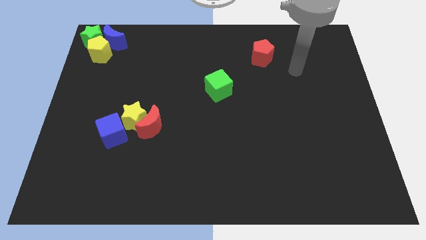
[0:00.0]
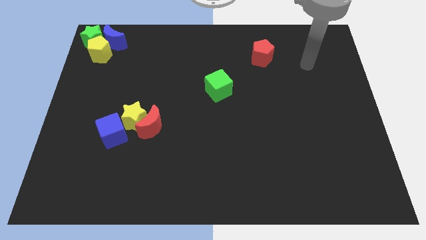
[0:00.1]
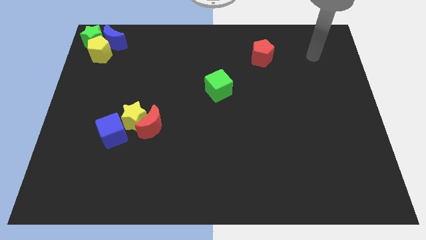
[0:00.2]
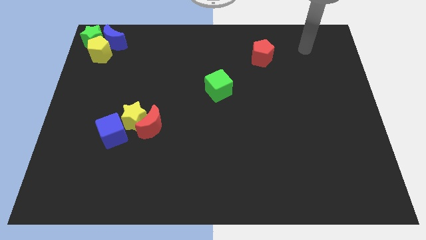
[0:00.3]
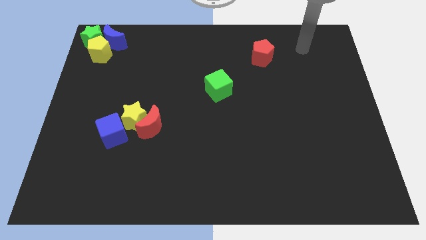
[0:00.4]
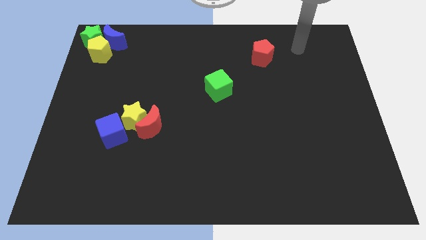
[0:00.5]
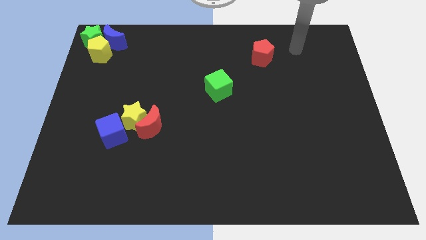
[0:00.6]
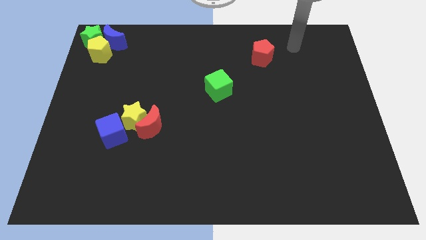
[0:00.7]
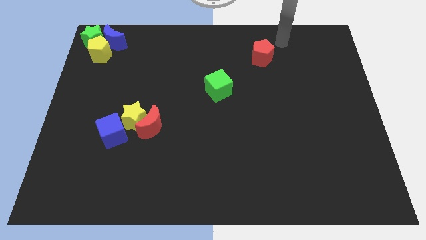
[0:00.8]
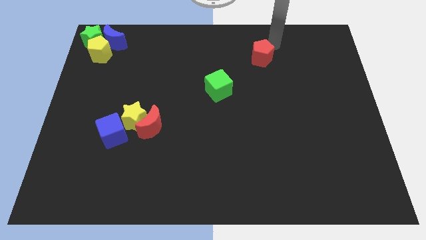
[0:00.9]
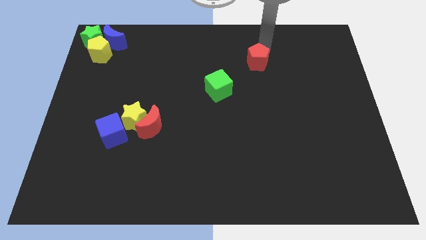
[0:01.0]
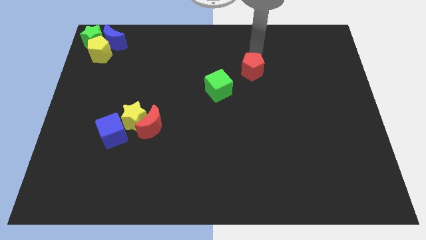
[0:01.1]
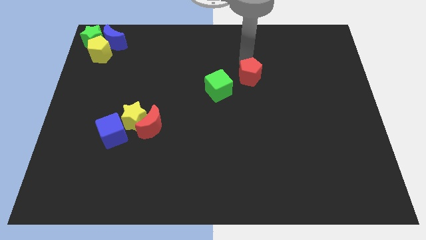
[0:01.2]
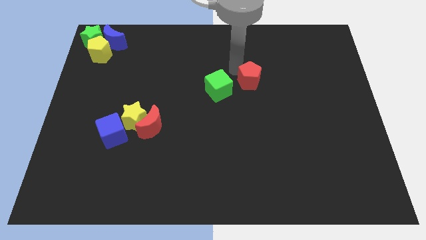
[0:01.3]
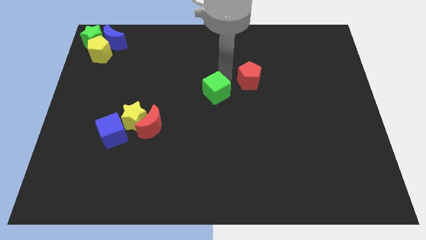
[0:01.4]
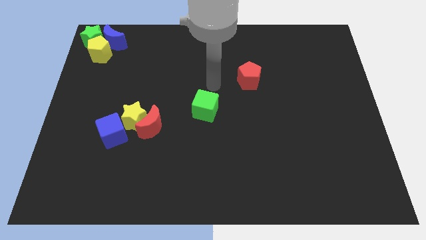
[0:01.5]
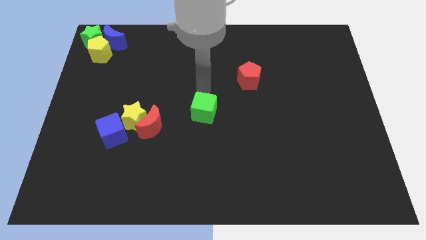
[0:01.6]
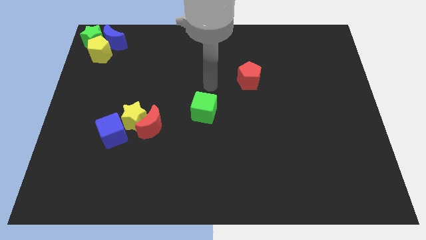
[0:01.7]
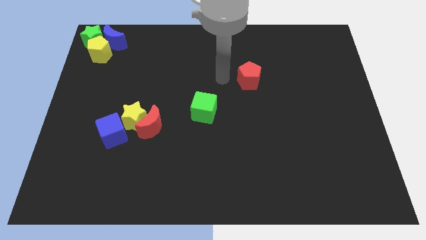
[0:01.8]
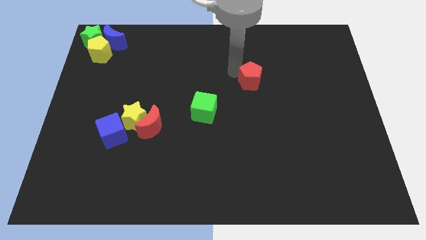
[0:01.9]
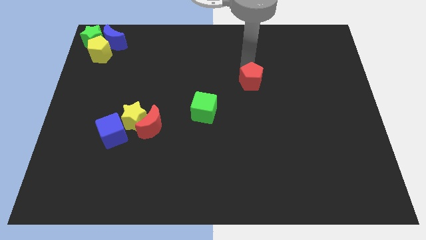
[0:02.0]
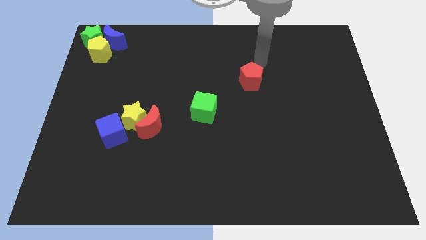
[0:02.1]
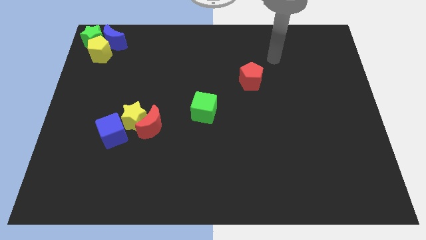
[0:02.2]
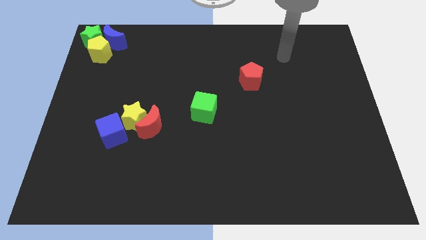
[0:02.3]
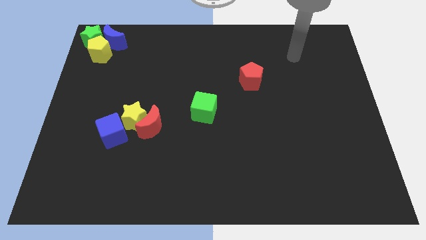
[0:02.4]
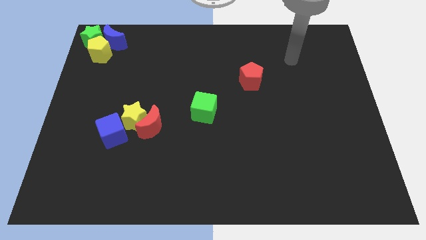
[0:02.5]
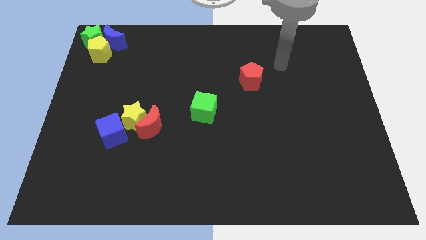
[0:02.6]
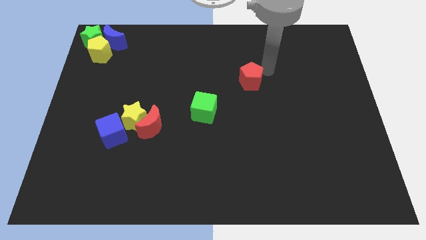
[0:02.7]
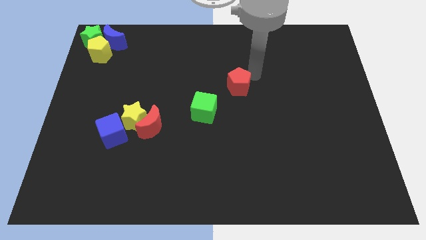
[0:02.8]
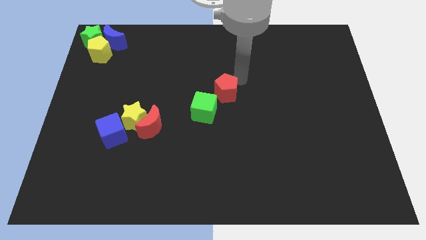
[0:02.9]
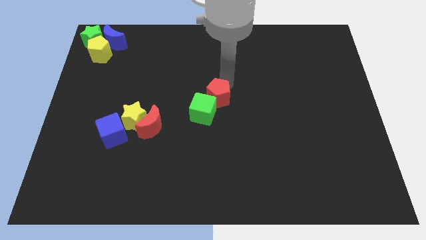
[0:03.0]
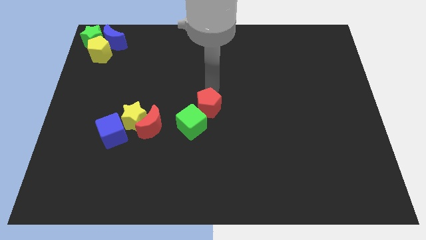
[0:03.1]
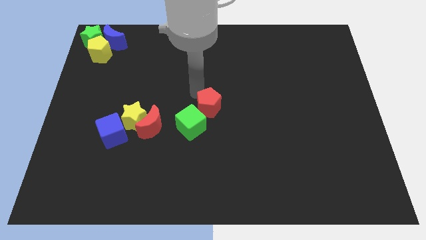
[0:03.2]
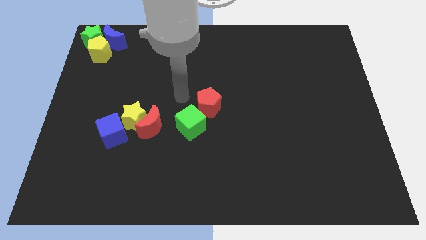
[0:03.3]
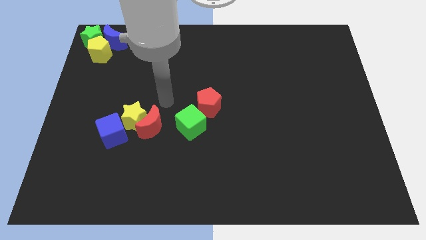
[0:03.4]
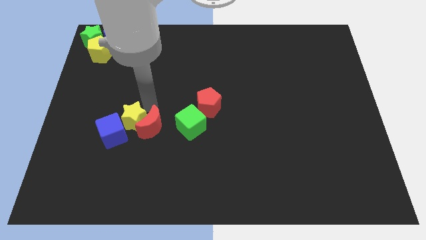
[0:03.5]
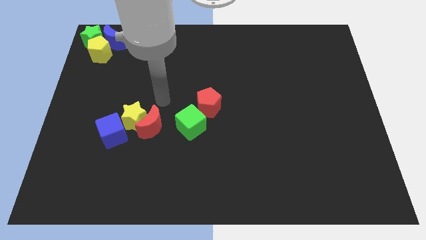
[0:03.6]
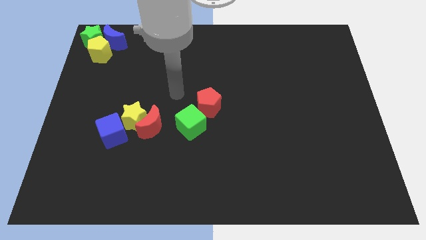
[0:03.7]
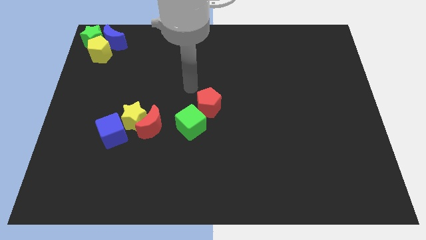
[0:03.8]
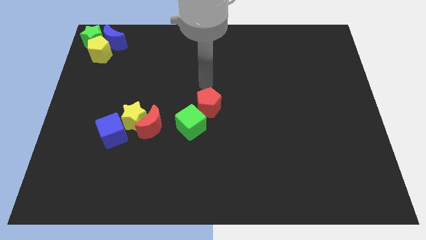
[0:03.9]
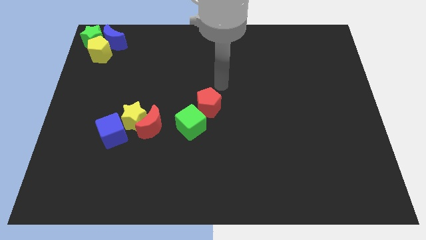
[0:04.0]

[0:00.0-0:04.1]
slide red pentagon and green cube towards the group of blocks

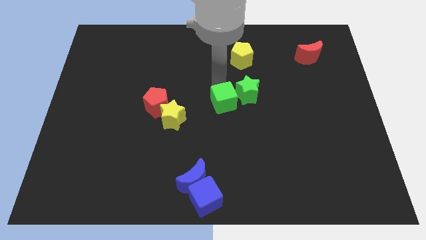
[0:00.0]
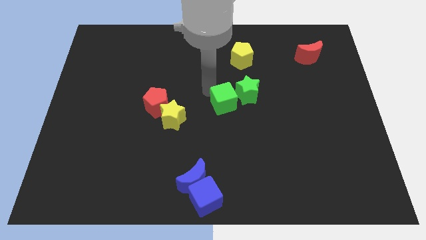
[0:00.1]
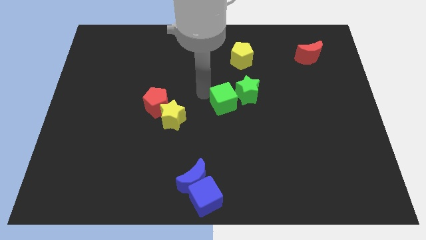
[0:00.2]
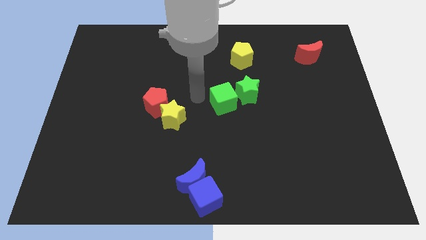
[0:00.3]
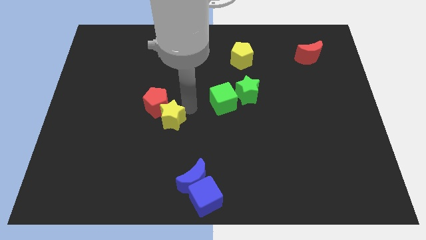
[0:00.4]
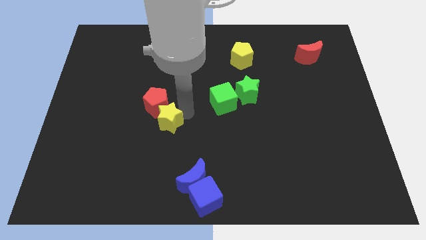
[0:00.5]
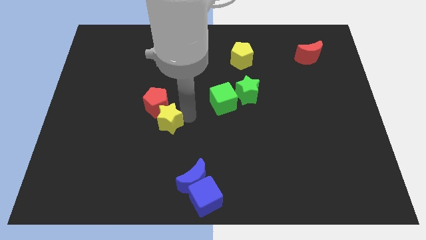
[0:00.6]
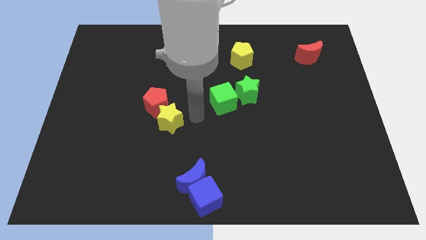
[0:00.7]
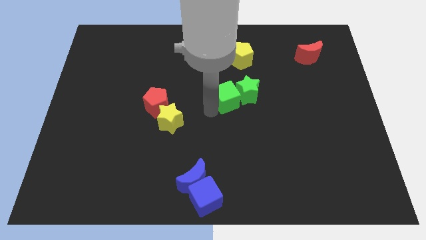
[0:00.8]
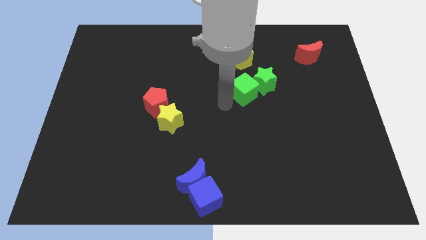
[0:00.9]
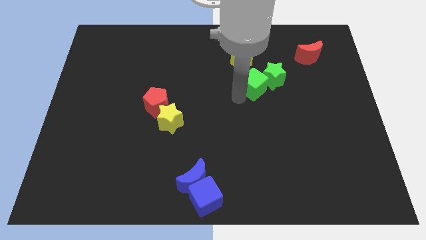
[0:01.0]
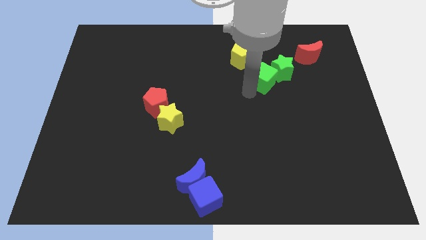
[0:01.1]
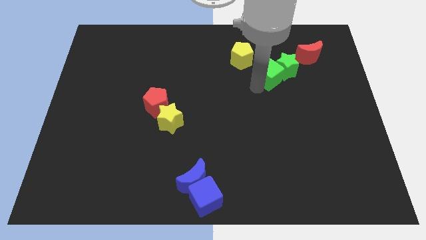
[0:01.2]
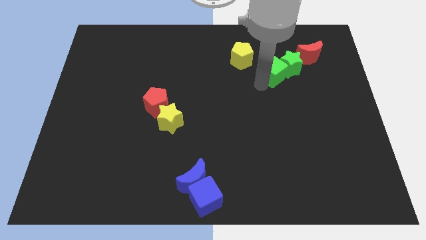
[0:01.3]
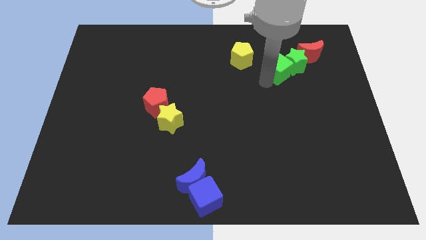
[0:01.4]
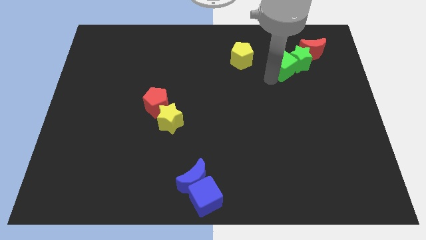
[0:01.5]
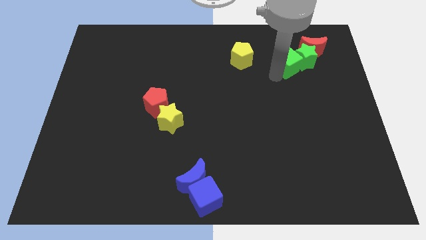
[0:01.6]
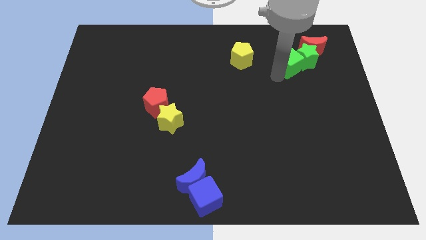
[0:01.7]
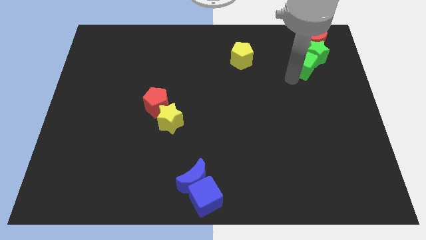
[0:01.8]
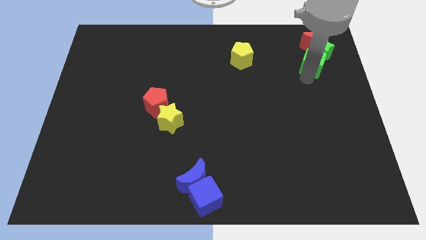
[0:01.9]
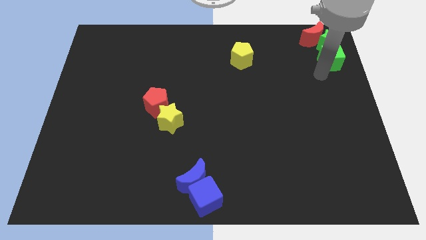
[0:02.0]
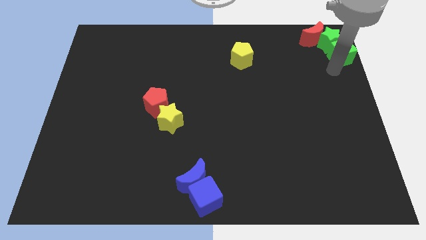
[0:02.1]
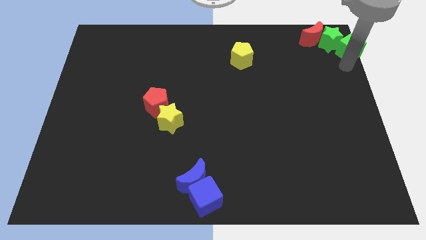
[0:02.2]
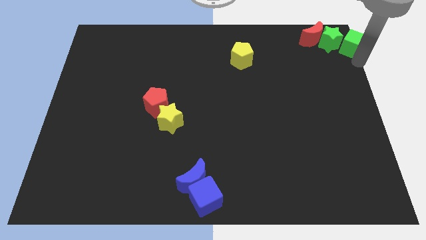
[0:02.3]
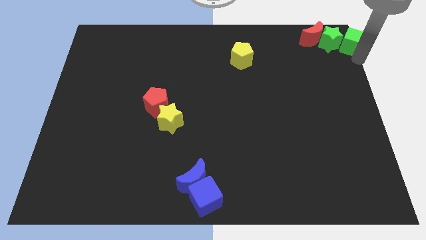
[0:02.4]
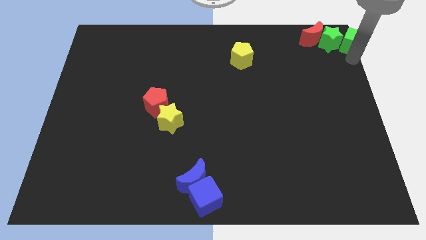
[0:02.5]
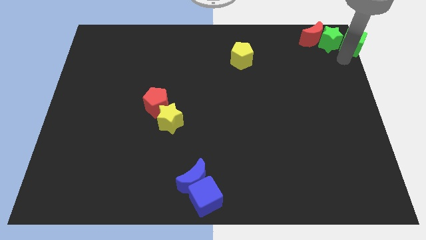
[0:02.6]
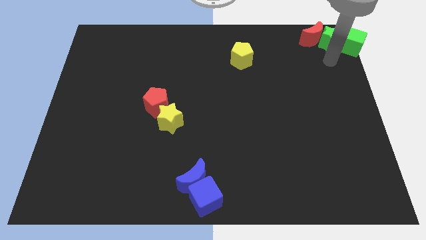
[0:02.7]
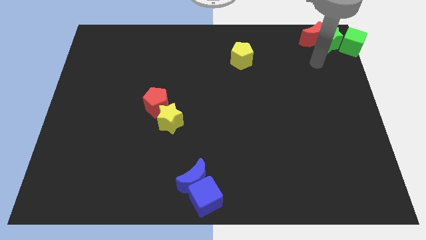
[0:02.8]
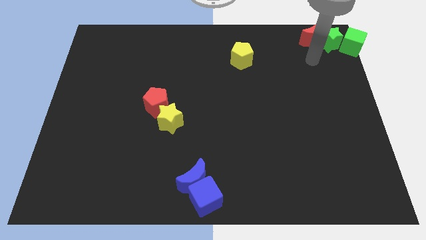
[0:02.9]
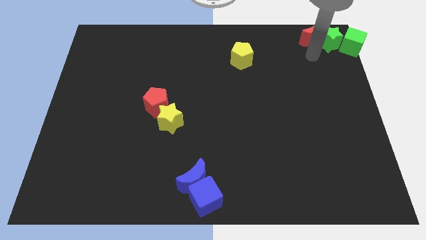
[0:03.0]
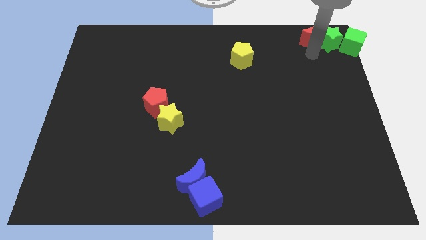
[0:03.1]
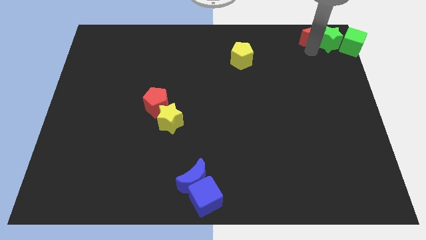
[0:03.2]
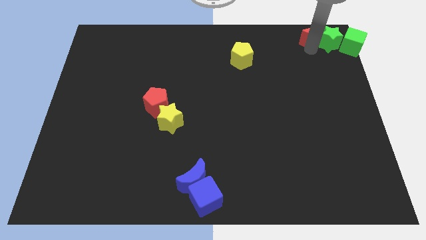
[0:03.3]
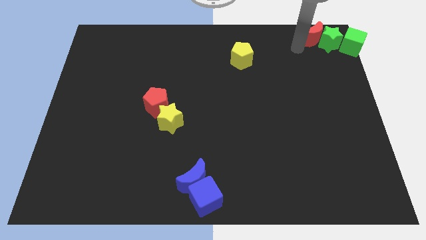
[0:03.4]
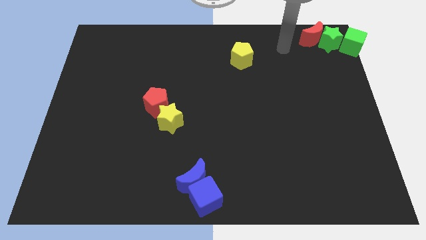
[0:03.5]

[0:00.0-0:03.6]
push the green cube into the green star

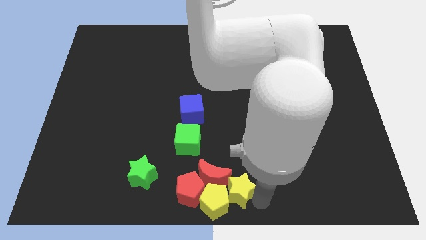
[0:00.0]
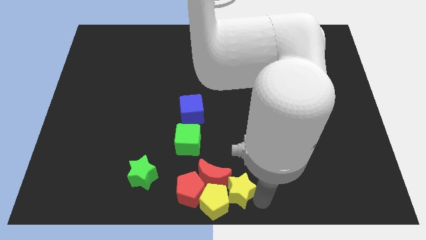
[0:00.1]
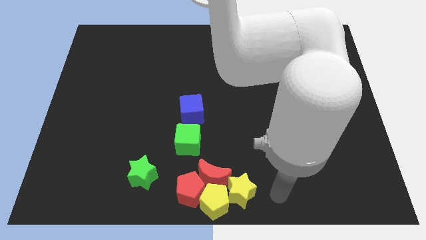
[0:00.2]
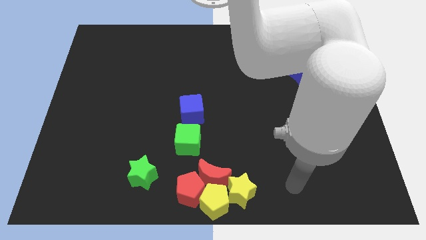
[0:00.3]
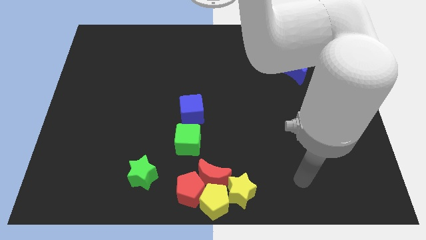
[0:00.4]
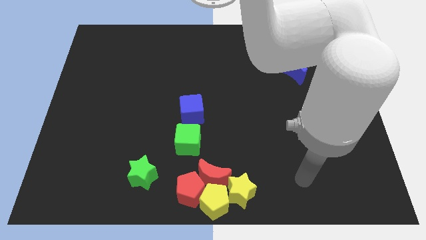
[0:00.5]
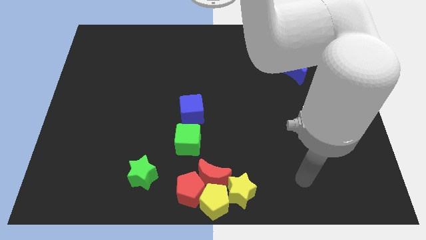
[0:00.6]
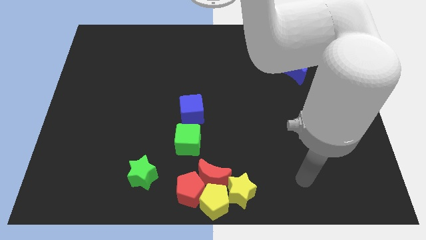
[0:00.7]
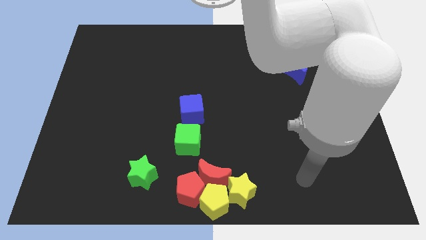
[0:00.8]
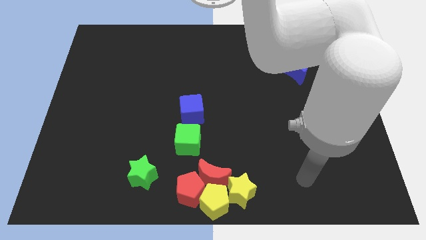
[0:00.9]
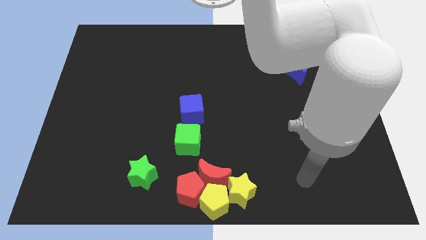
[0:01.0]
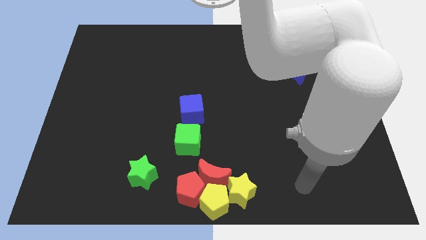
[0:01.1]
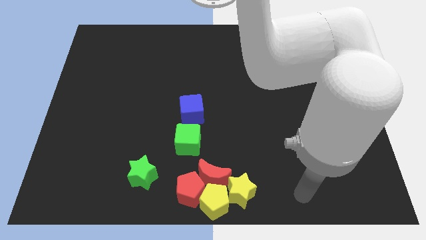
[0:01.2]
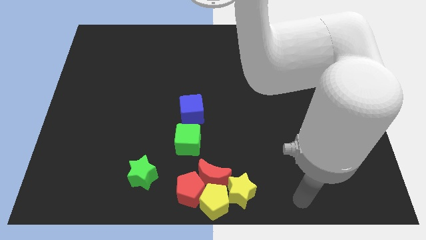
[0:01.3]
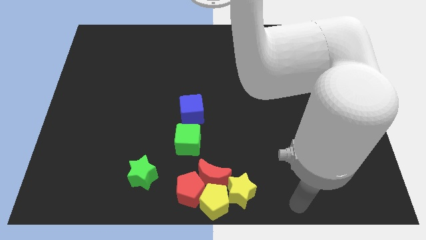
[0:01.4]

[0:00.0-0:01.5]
move your arm away from yellow star
